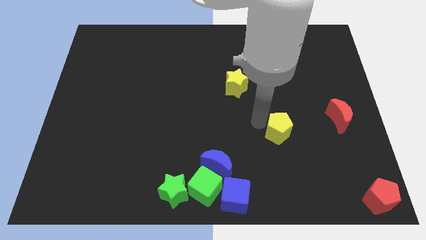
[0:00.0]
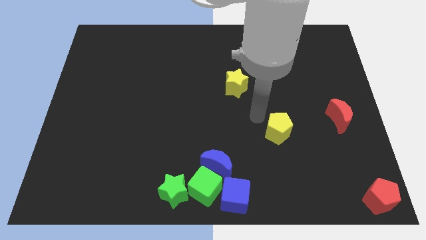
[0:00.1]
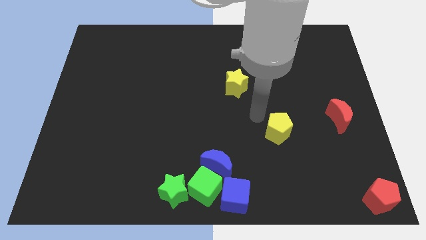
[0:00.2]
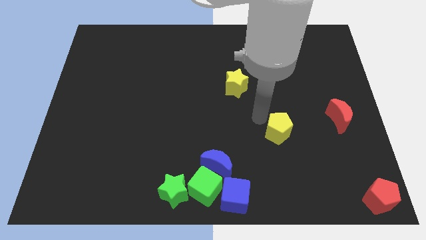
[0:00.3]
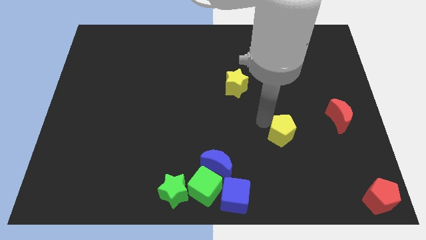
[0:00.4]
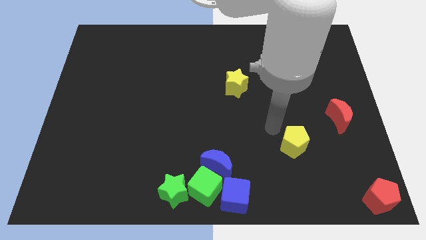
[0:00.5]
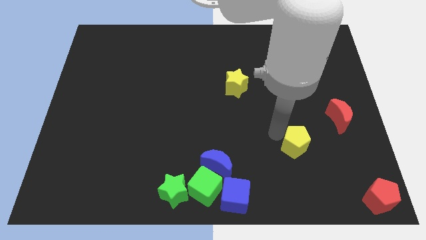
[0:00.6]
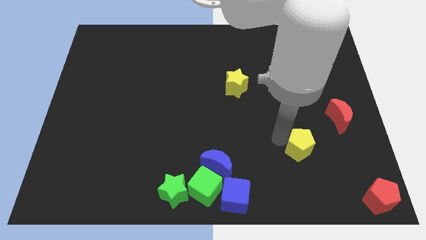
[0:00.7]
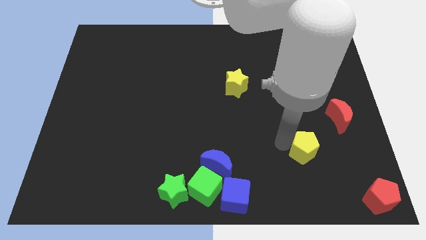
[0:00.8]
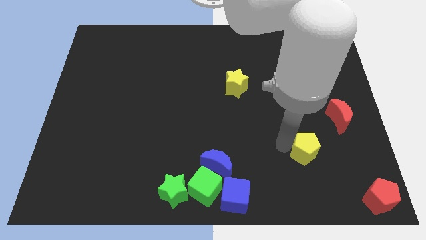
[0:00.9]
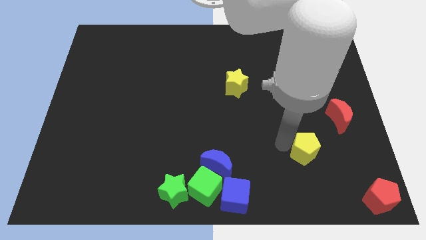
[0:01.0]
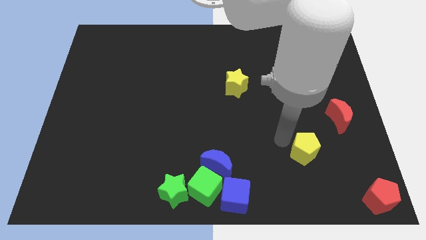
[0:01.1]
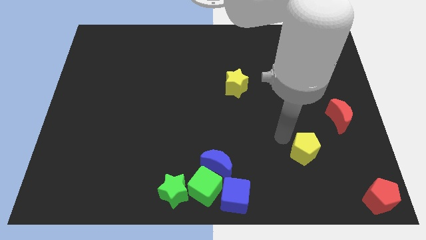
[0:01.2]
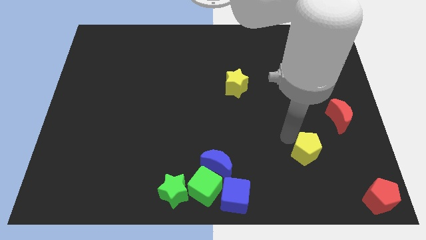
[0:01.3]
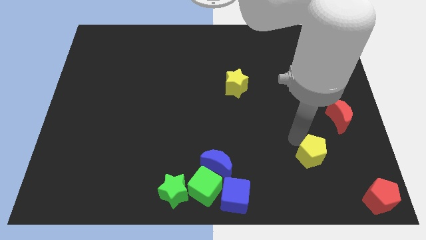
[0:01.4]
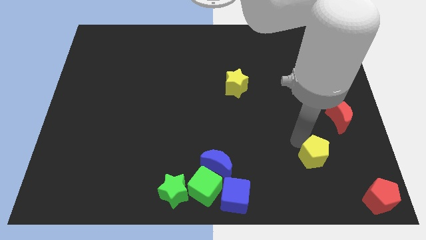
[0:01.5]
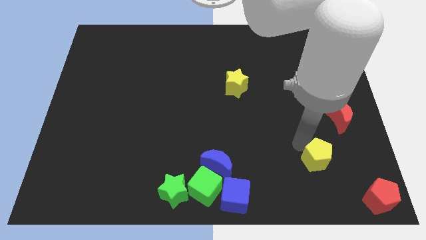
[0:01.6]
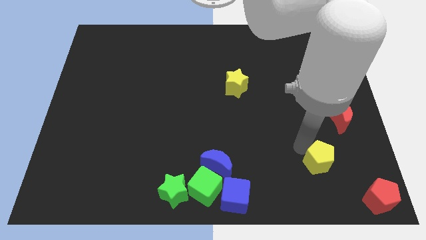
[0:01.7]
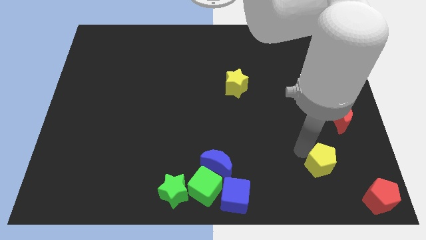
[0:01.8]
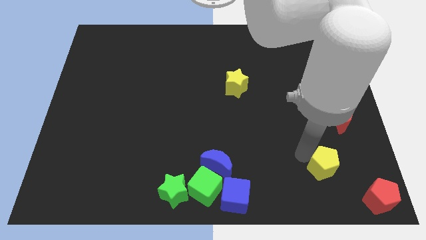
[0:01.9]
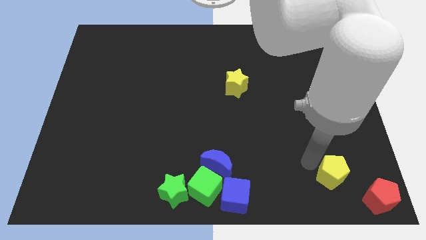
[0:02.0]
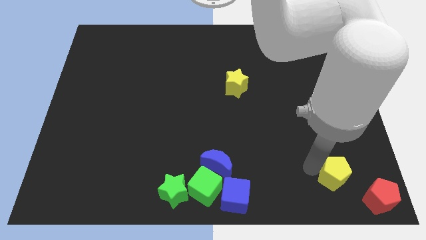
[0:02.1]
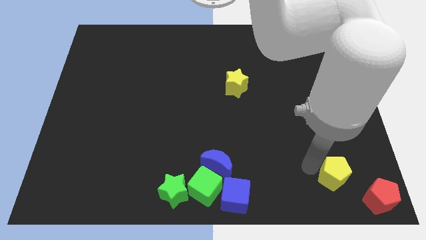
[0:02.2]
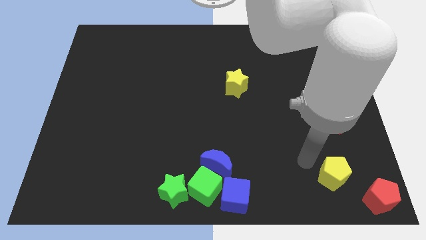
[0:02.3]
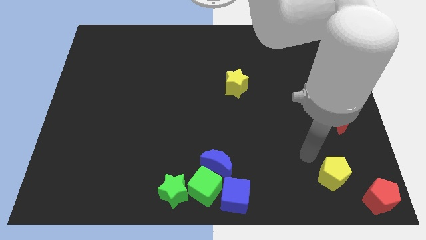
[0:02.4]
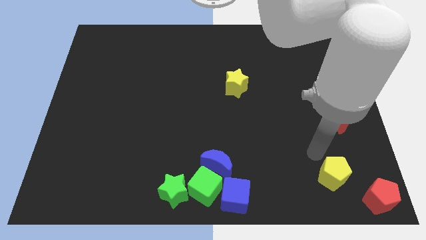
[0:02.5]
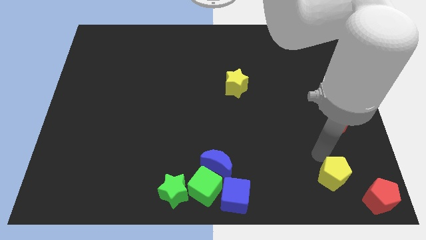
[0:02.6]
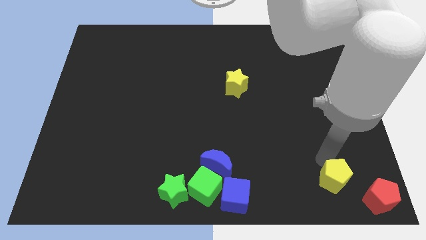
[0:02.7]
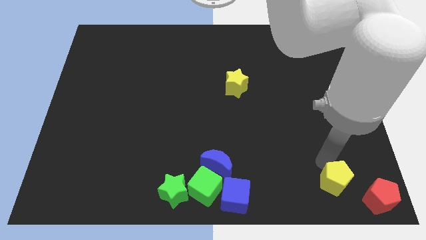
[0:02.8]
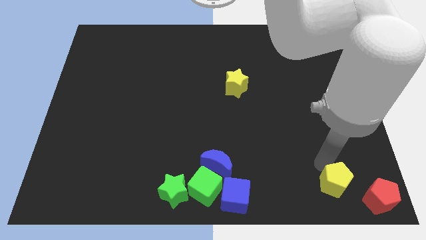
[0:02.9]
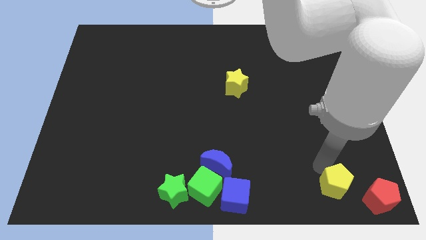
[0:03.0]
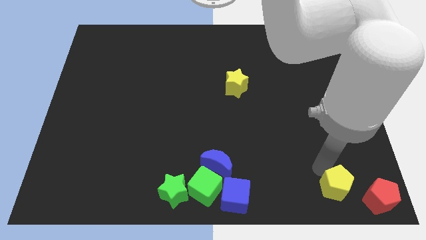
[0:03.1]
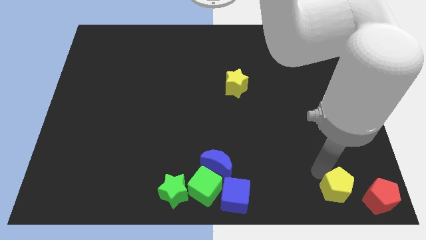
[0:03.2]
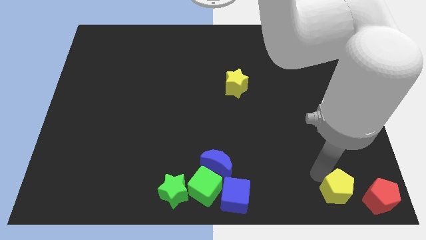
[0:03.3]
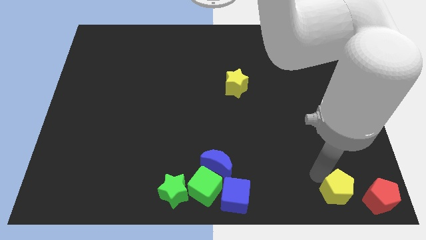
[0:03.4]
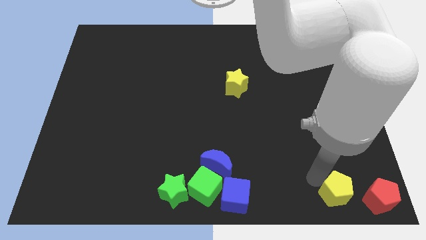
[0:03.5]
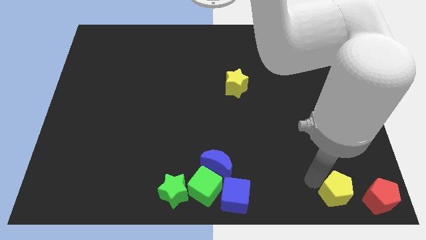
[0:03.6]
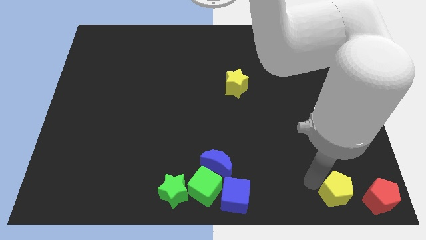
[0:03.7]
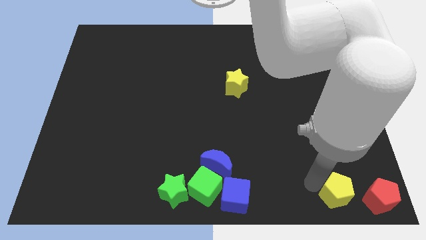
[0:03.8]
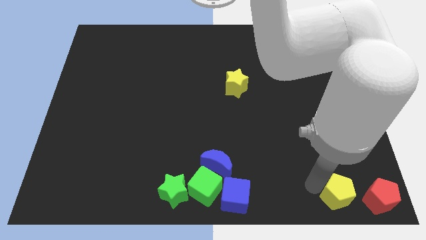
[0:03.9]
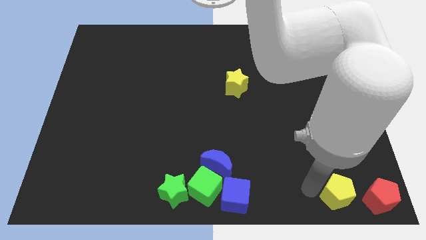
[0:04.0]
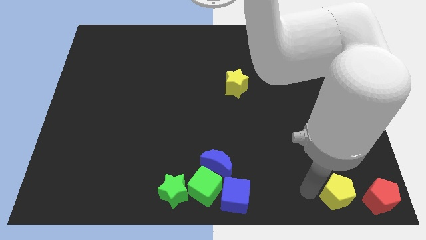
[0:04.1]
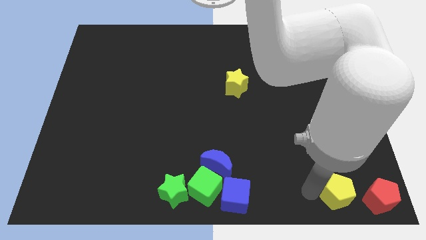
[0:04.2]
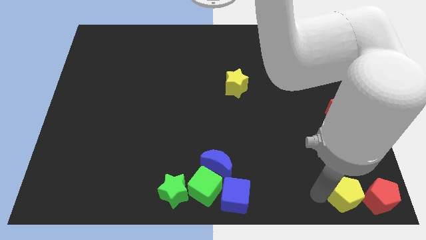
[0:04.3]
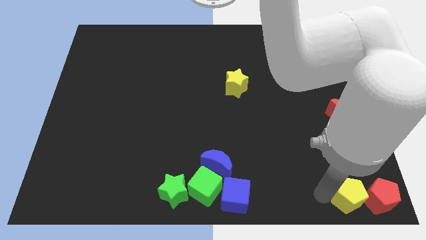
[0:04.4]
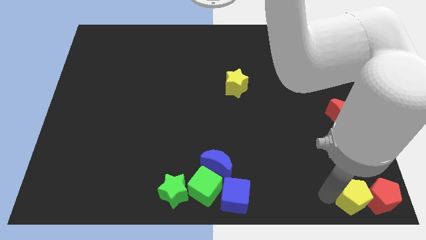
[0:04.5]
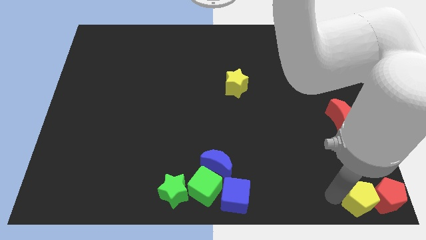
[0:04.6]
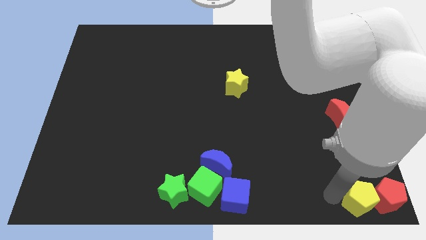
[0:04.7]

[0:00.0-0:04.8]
push the yellow pentagon into the left side of the red pentagon

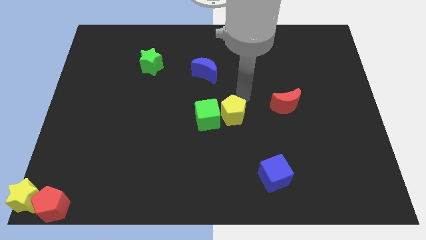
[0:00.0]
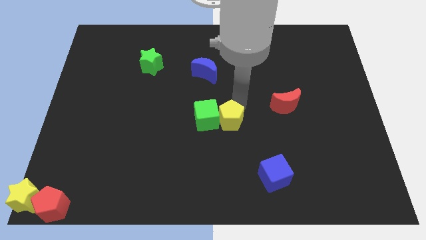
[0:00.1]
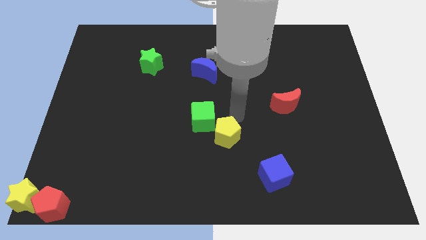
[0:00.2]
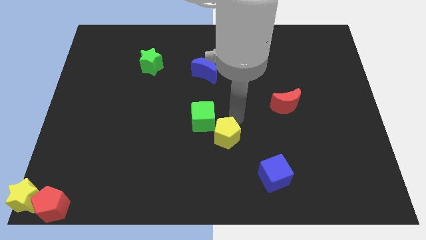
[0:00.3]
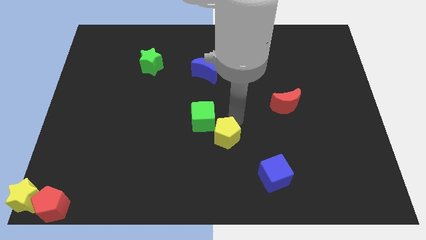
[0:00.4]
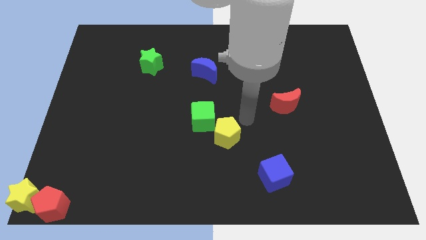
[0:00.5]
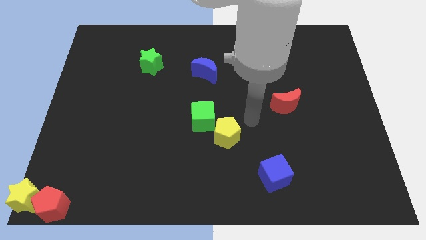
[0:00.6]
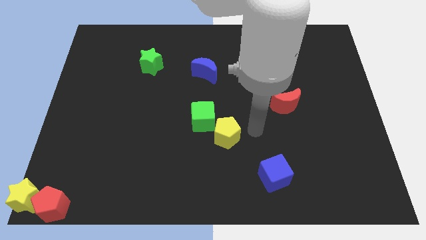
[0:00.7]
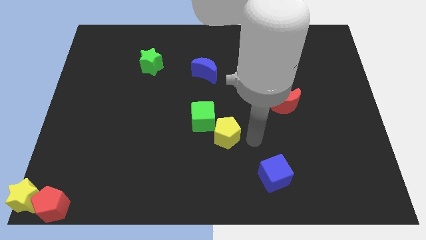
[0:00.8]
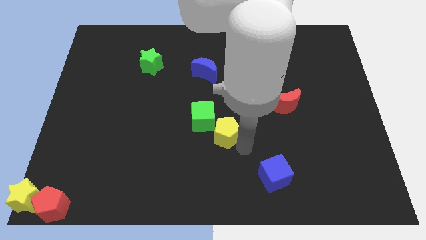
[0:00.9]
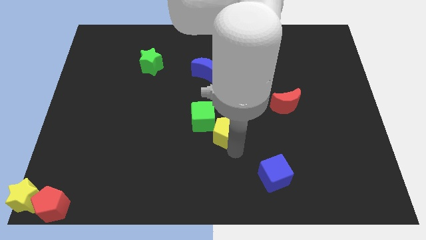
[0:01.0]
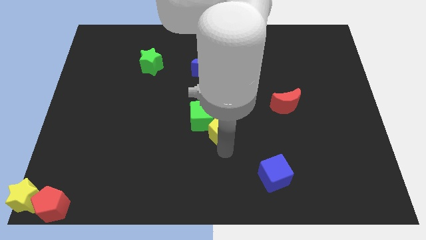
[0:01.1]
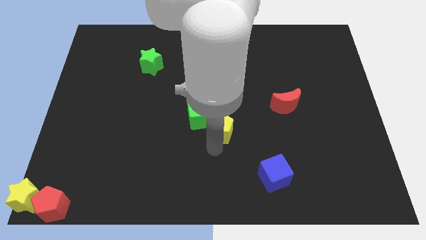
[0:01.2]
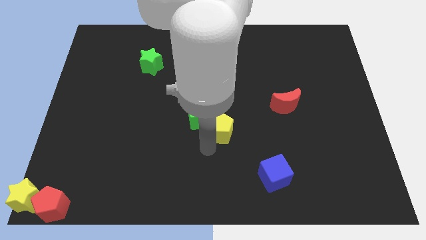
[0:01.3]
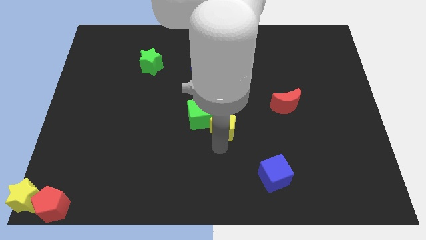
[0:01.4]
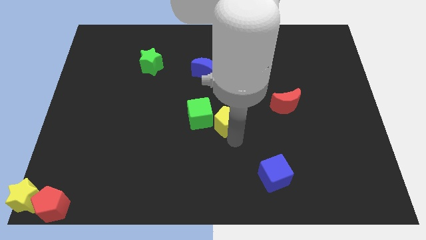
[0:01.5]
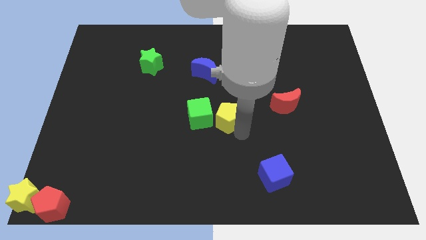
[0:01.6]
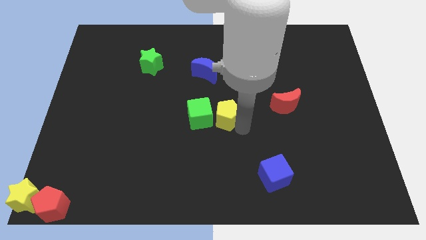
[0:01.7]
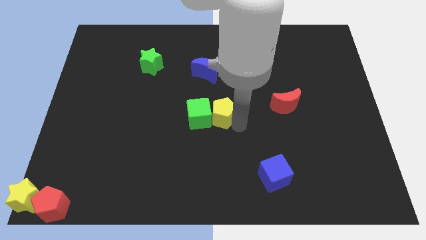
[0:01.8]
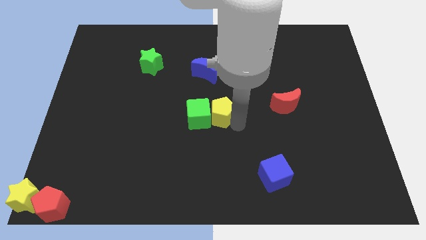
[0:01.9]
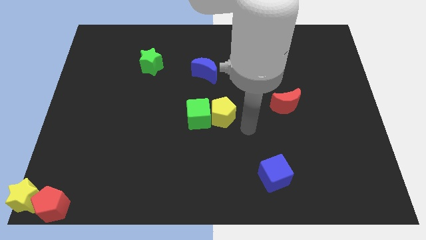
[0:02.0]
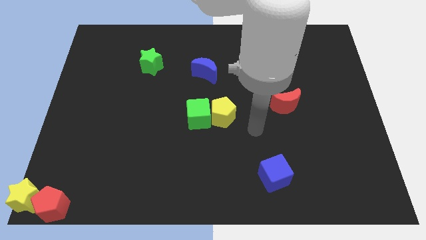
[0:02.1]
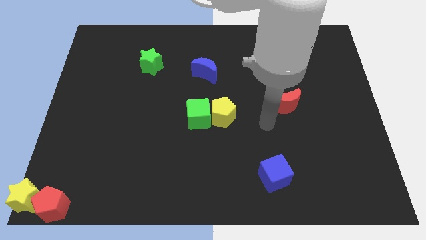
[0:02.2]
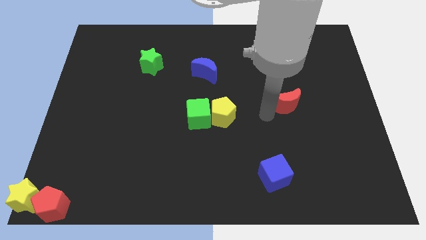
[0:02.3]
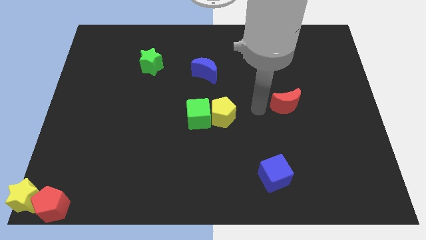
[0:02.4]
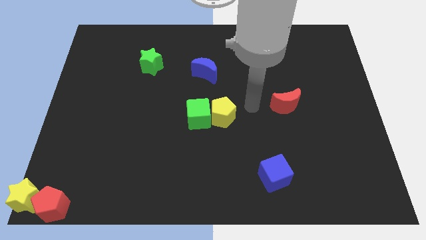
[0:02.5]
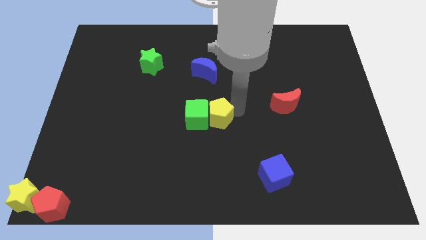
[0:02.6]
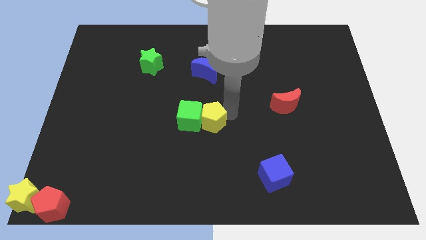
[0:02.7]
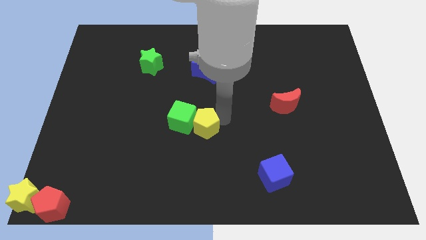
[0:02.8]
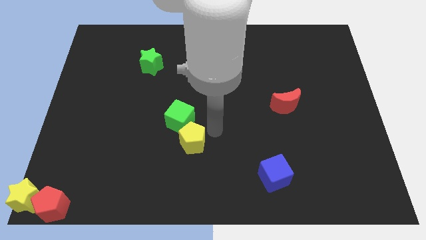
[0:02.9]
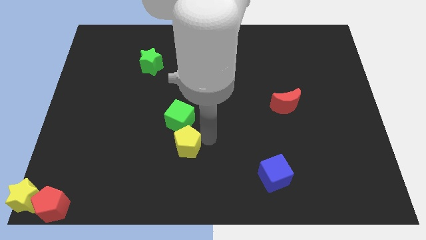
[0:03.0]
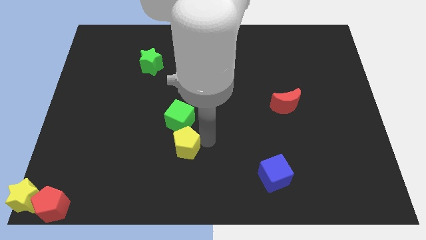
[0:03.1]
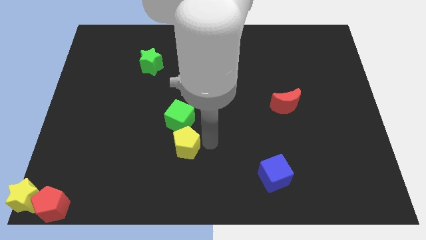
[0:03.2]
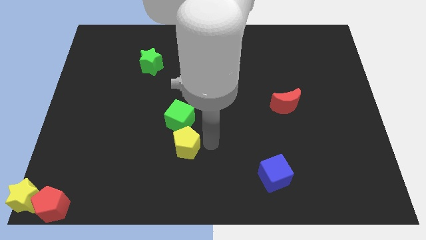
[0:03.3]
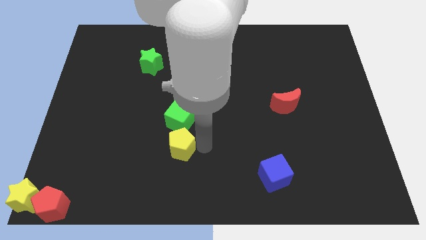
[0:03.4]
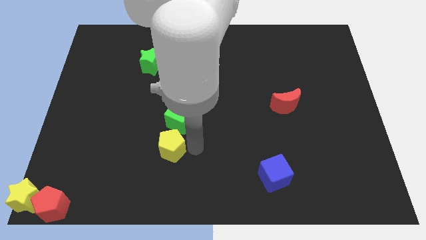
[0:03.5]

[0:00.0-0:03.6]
move the yellow pentagon to the bottom of the green cube

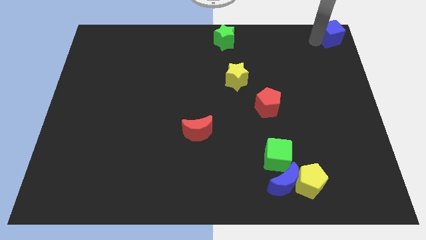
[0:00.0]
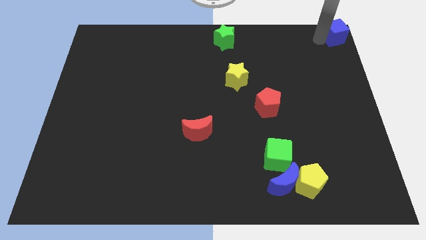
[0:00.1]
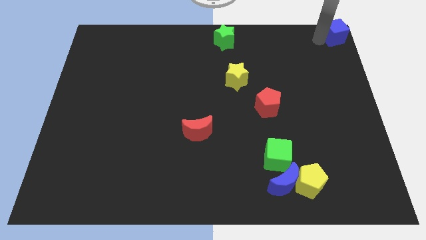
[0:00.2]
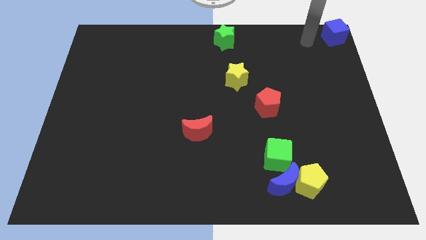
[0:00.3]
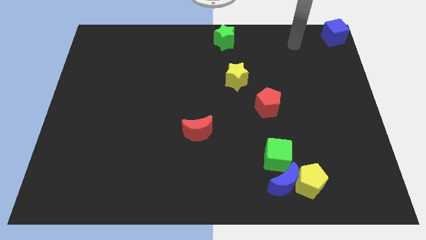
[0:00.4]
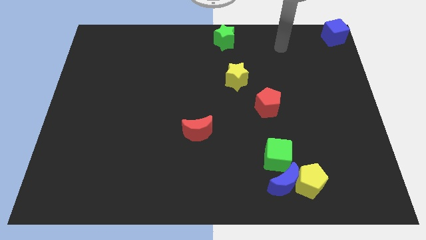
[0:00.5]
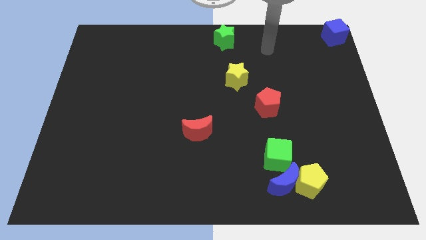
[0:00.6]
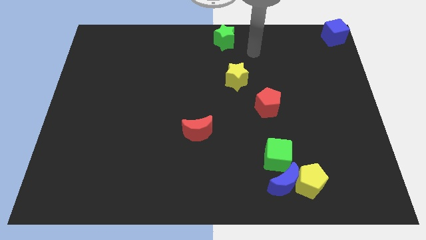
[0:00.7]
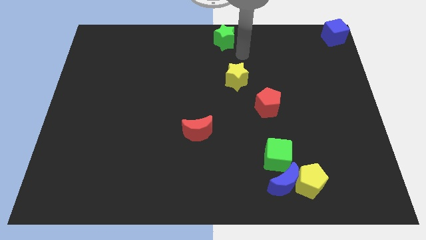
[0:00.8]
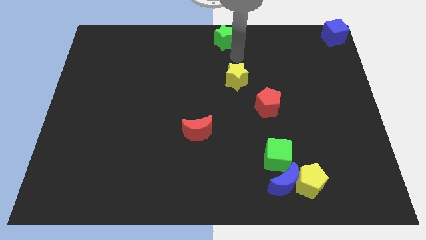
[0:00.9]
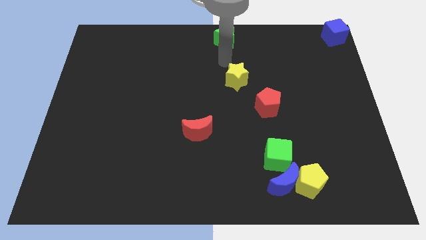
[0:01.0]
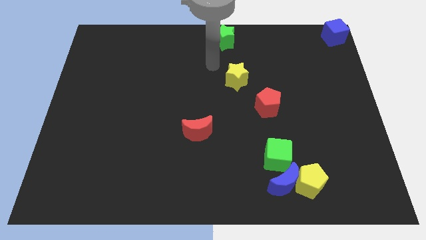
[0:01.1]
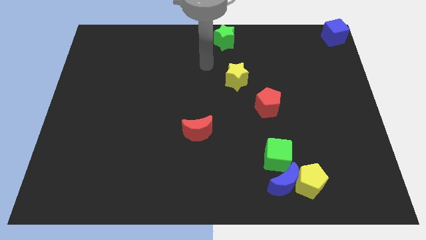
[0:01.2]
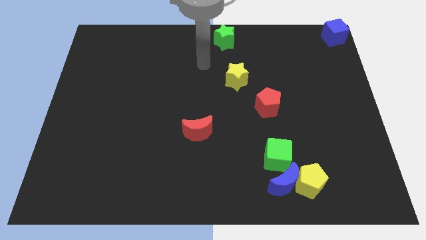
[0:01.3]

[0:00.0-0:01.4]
move the the arm below the green star
